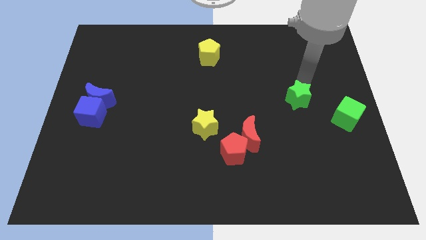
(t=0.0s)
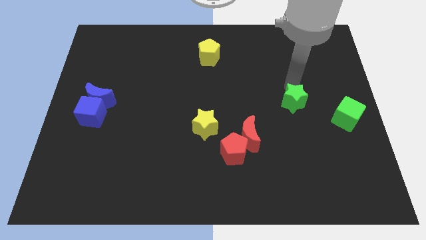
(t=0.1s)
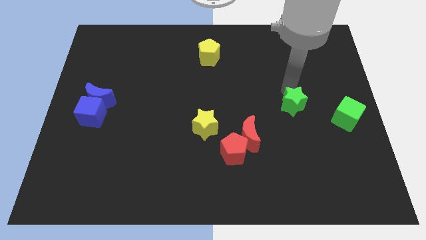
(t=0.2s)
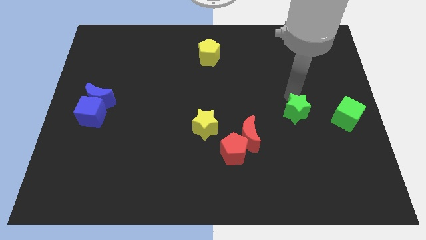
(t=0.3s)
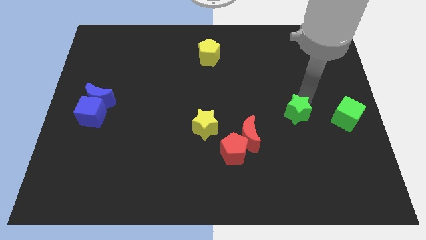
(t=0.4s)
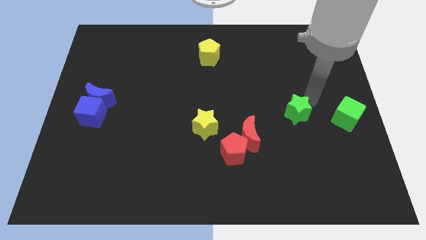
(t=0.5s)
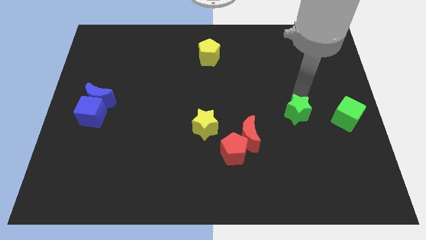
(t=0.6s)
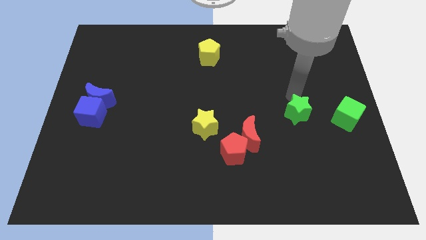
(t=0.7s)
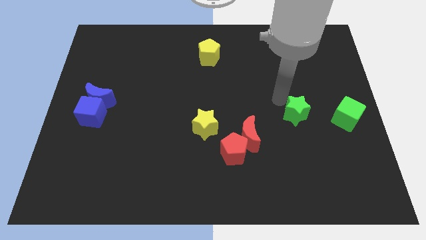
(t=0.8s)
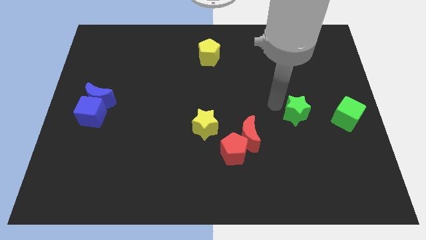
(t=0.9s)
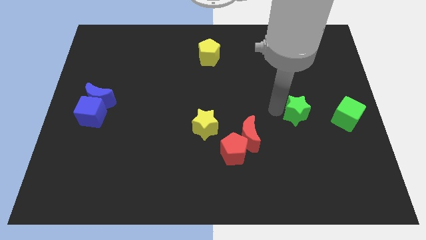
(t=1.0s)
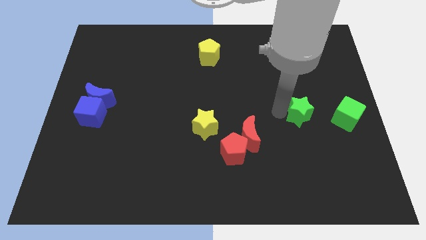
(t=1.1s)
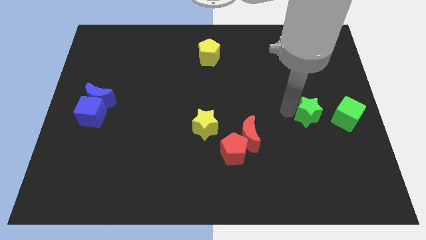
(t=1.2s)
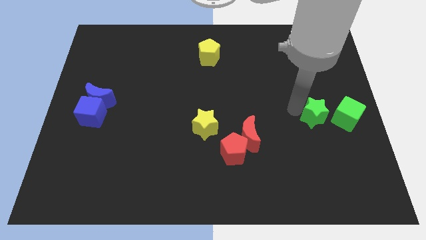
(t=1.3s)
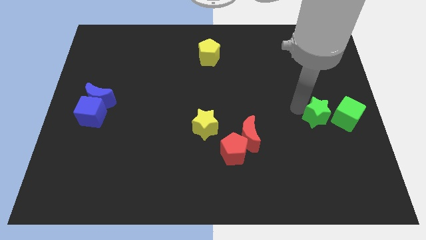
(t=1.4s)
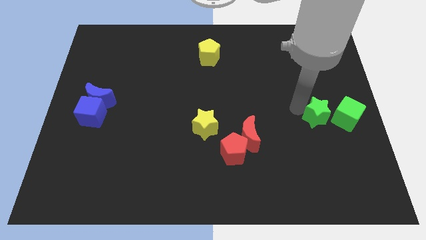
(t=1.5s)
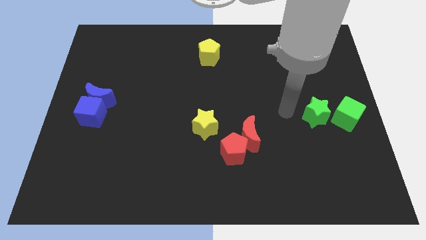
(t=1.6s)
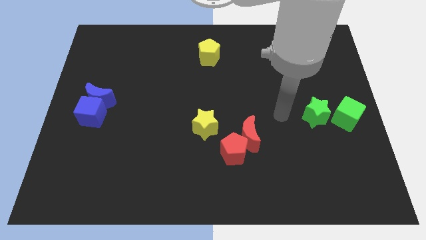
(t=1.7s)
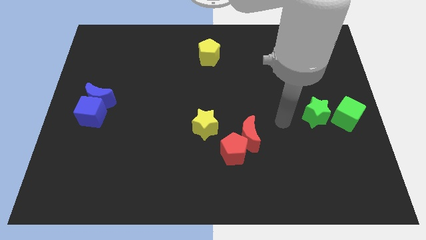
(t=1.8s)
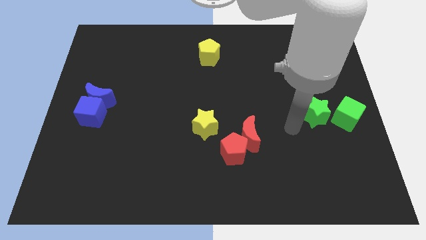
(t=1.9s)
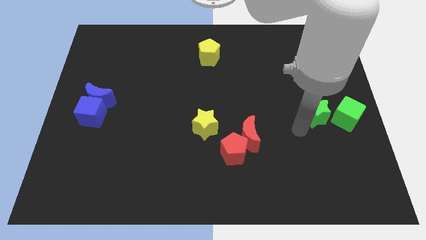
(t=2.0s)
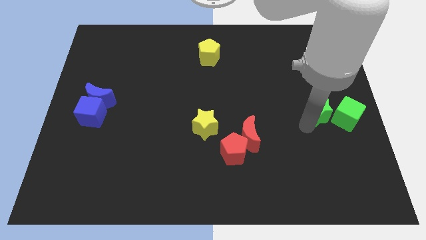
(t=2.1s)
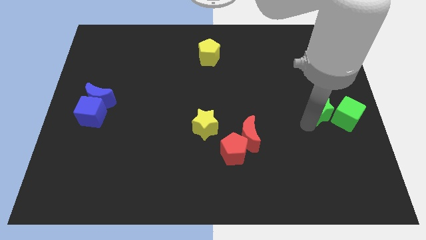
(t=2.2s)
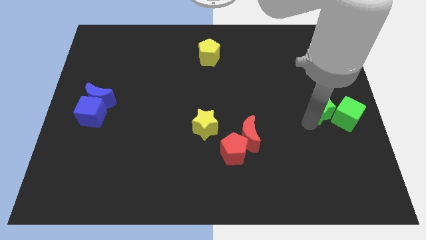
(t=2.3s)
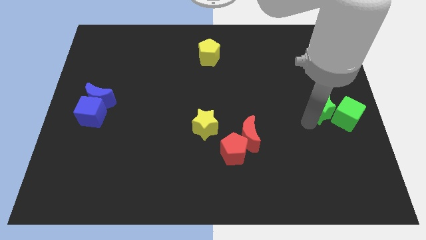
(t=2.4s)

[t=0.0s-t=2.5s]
push the green star close to the green cube

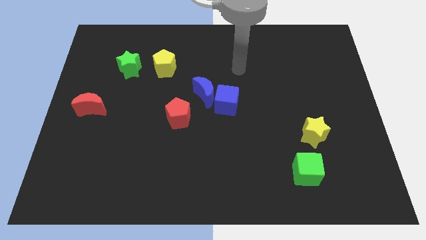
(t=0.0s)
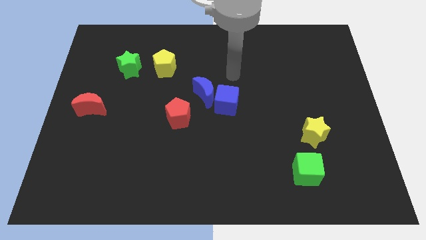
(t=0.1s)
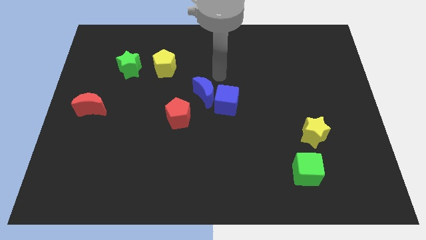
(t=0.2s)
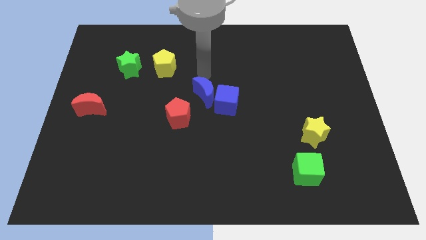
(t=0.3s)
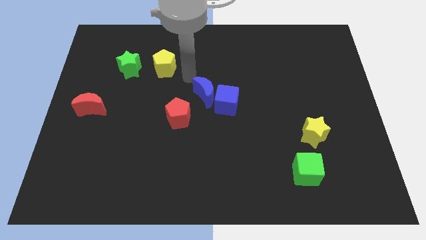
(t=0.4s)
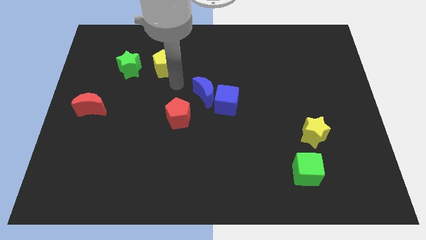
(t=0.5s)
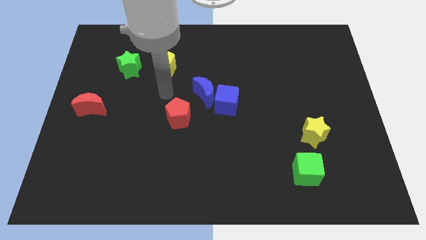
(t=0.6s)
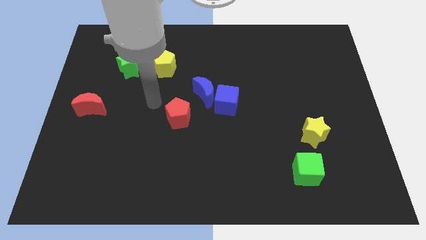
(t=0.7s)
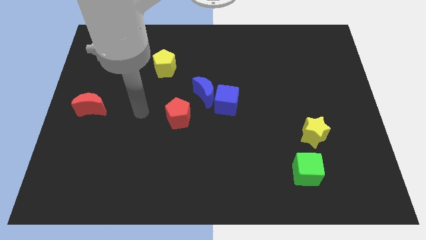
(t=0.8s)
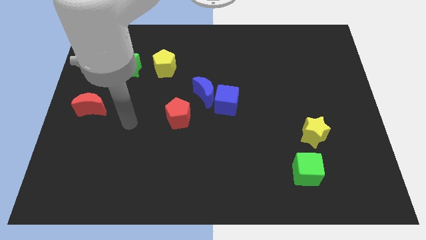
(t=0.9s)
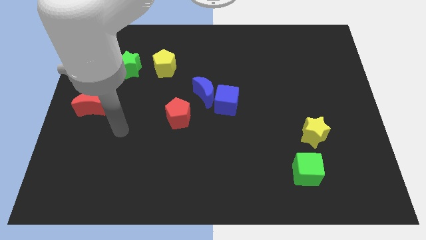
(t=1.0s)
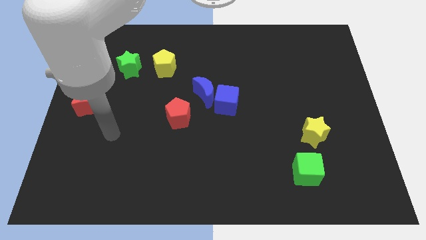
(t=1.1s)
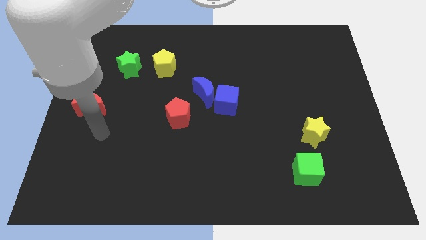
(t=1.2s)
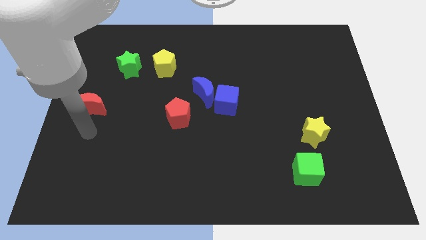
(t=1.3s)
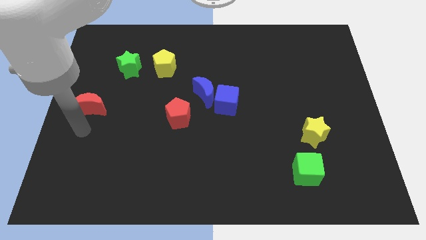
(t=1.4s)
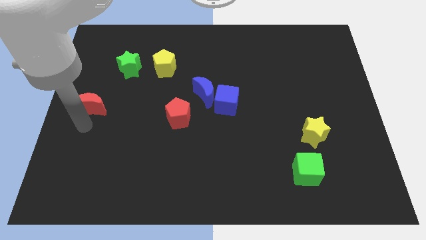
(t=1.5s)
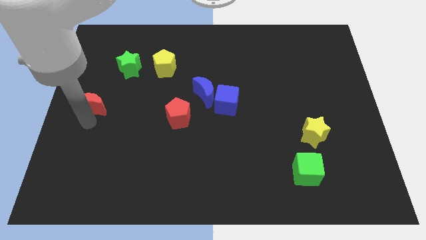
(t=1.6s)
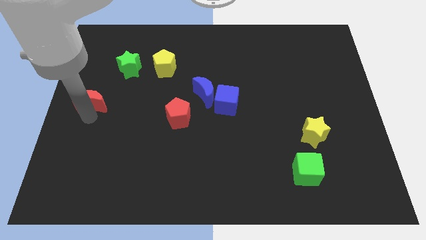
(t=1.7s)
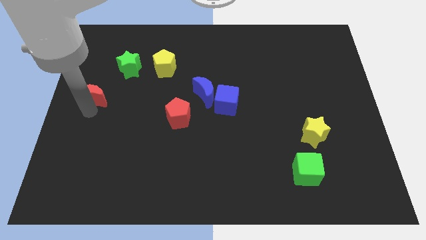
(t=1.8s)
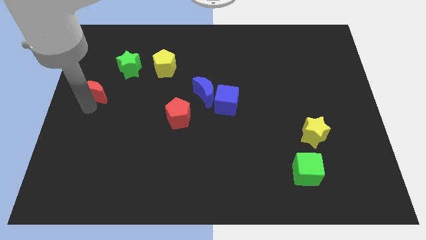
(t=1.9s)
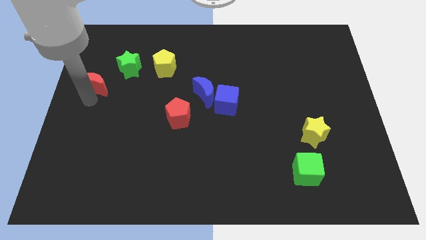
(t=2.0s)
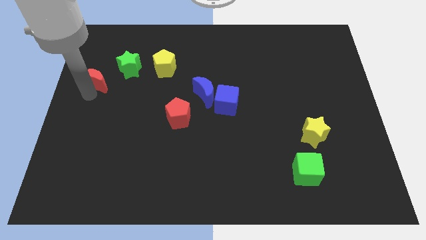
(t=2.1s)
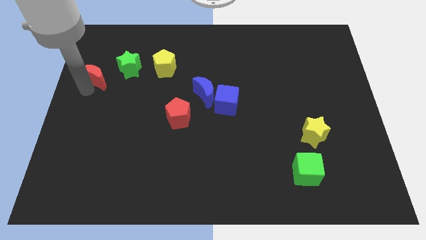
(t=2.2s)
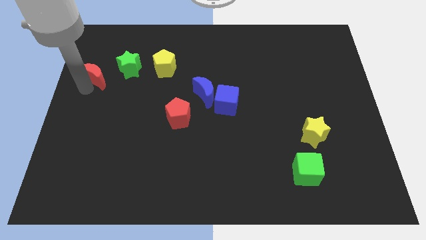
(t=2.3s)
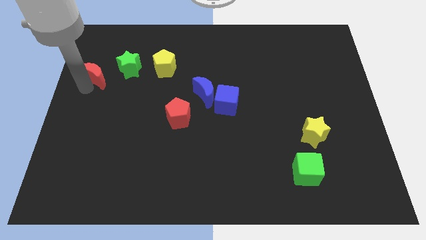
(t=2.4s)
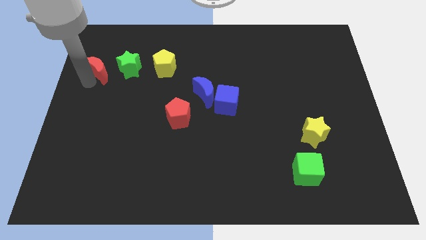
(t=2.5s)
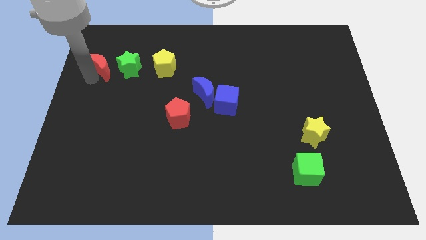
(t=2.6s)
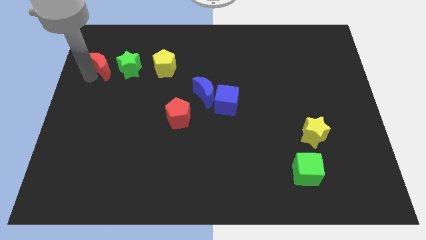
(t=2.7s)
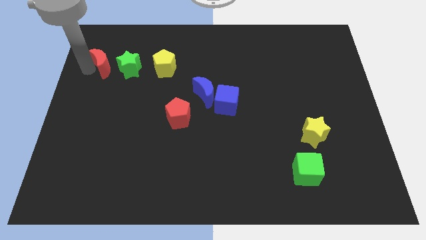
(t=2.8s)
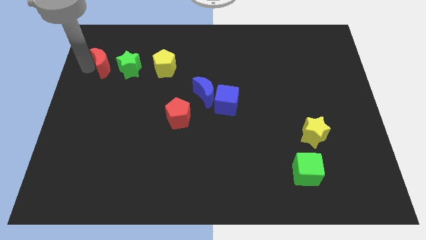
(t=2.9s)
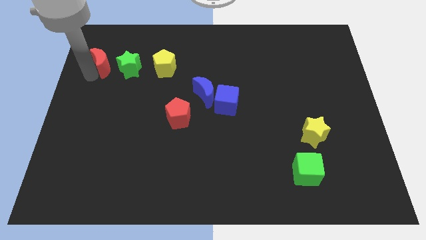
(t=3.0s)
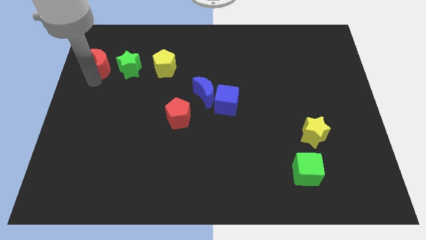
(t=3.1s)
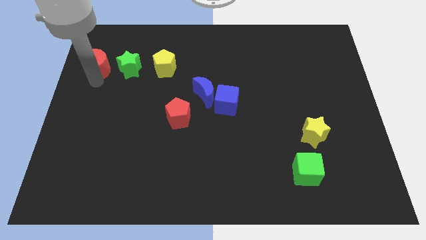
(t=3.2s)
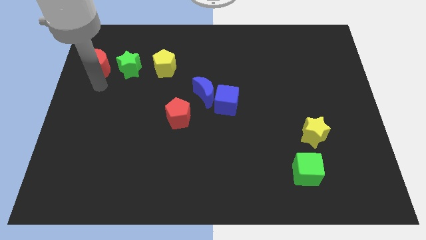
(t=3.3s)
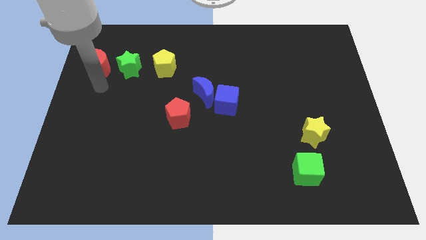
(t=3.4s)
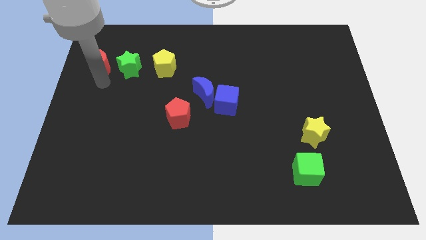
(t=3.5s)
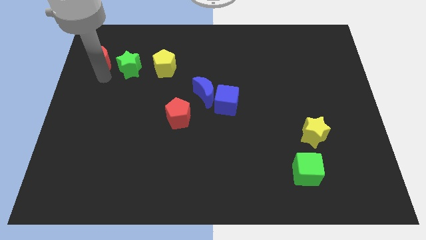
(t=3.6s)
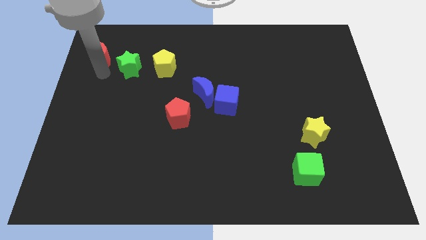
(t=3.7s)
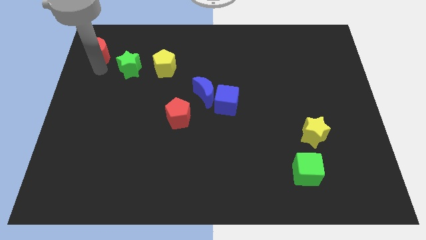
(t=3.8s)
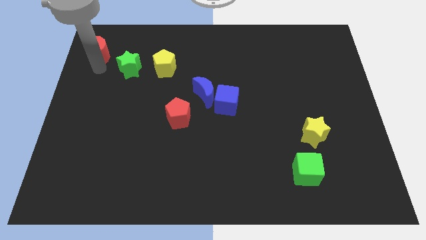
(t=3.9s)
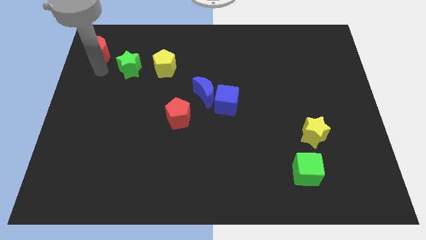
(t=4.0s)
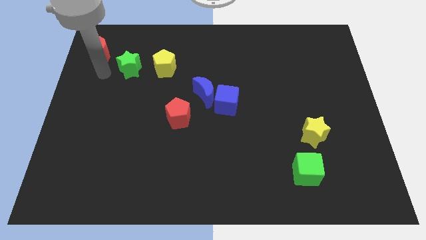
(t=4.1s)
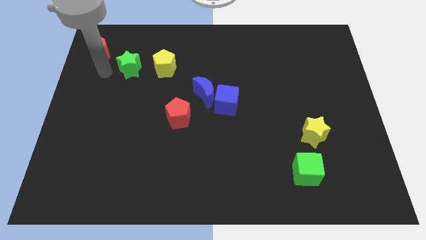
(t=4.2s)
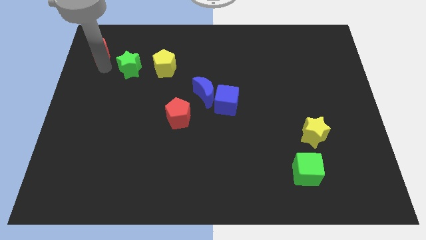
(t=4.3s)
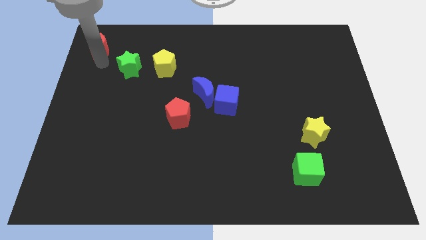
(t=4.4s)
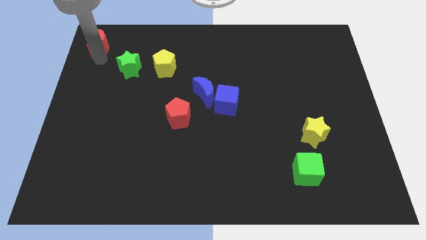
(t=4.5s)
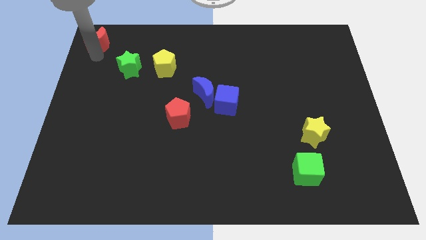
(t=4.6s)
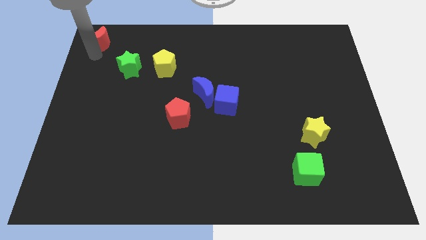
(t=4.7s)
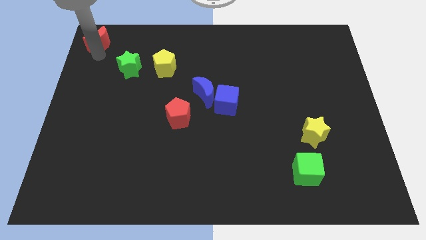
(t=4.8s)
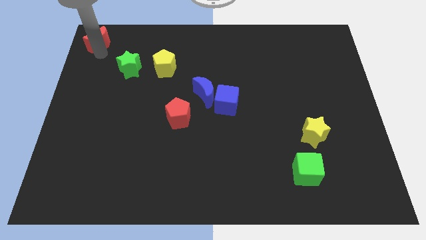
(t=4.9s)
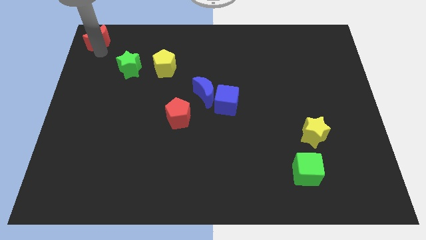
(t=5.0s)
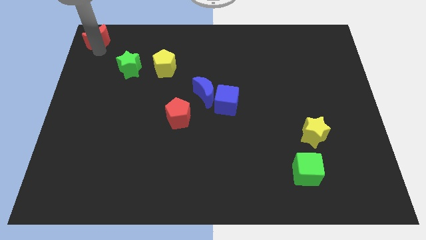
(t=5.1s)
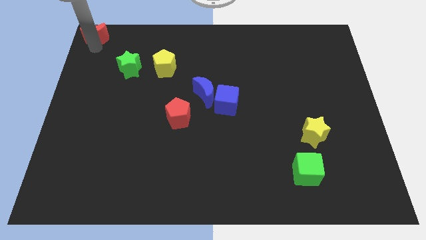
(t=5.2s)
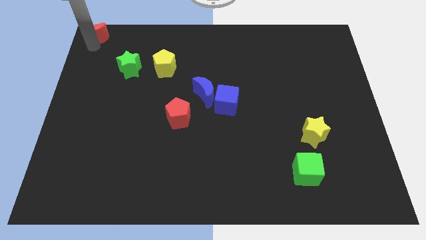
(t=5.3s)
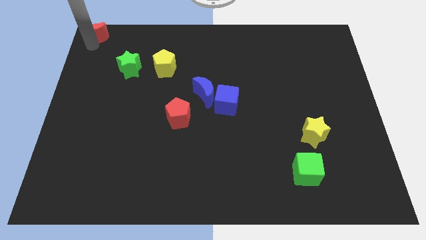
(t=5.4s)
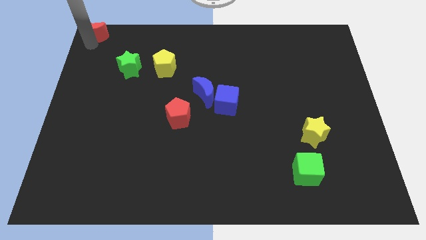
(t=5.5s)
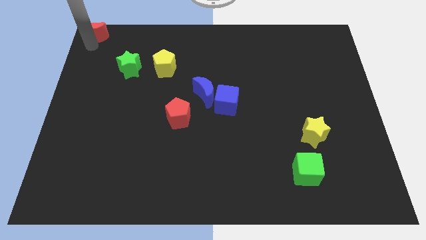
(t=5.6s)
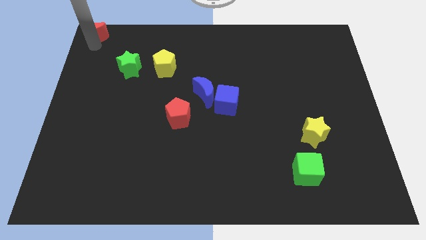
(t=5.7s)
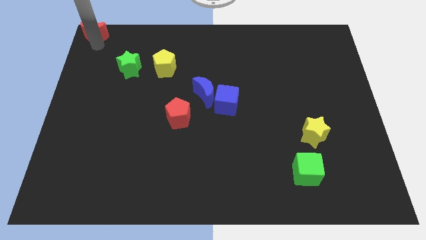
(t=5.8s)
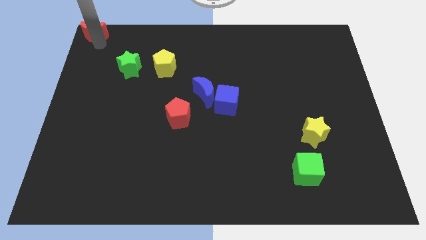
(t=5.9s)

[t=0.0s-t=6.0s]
move the red crescent to the top left corner

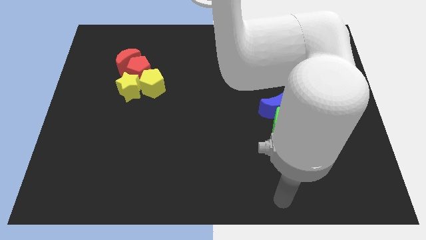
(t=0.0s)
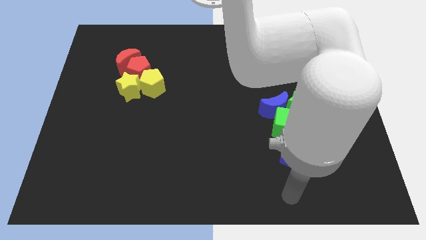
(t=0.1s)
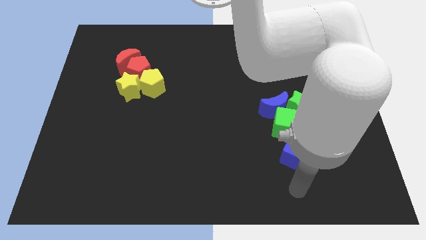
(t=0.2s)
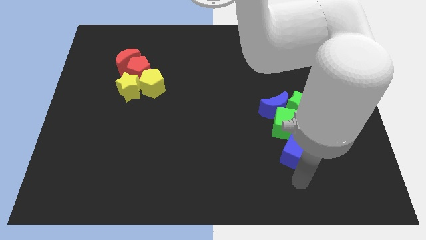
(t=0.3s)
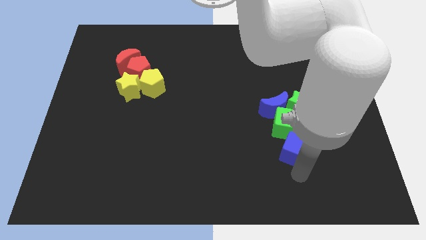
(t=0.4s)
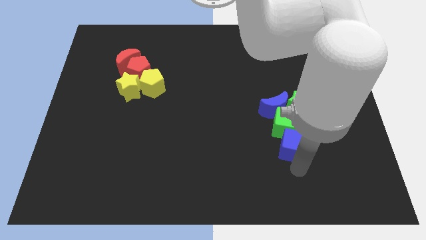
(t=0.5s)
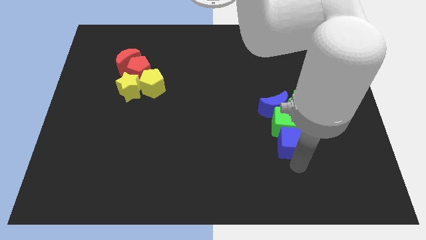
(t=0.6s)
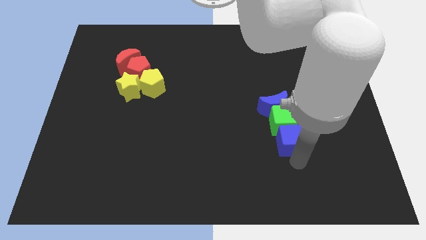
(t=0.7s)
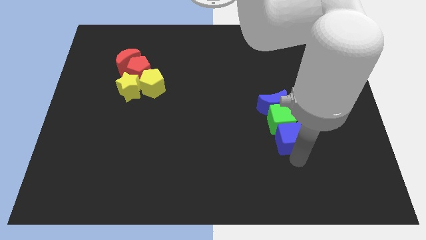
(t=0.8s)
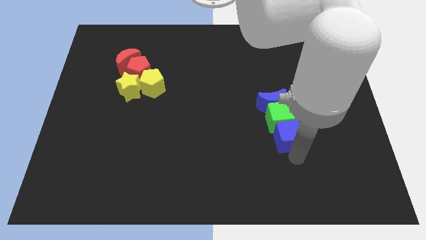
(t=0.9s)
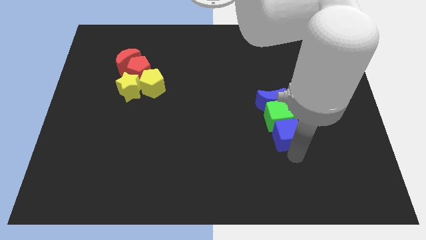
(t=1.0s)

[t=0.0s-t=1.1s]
move the blue cube below the green cube
